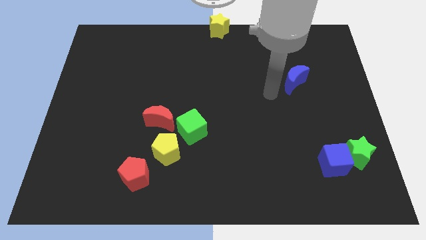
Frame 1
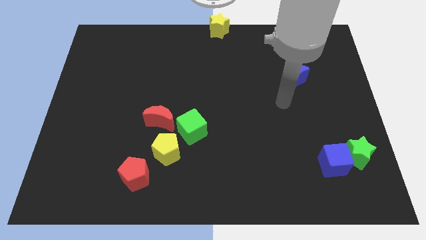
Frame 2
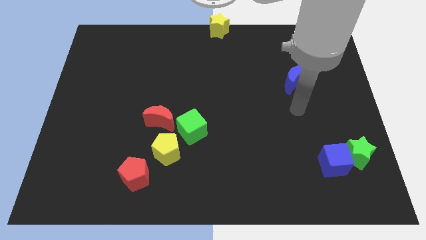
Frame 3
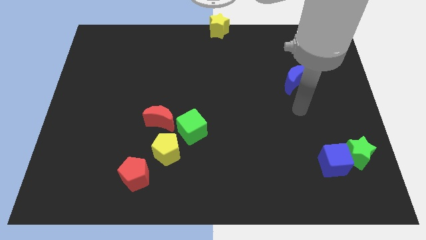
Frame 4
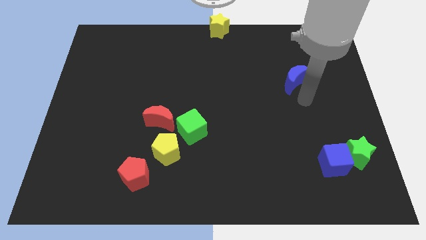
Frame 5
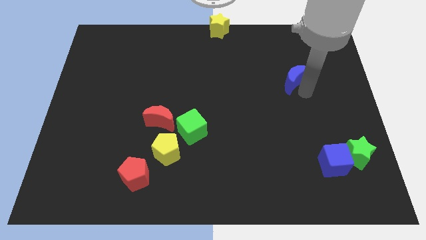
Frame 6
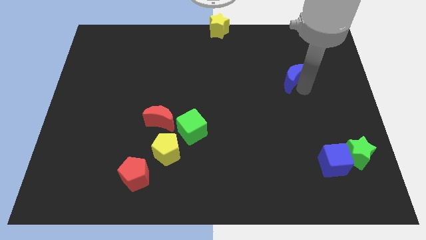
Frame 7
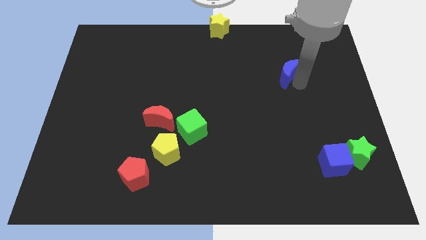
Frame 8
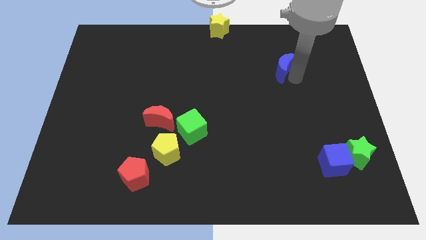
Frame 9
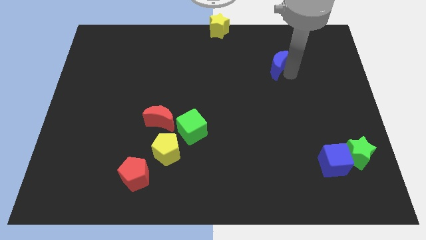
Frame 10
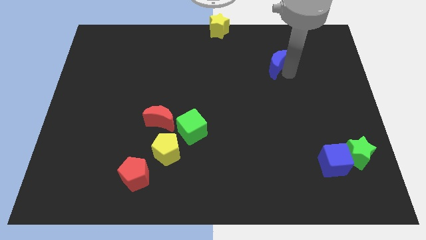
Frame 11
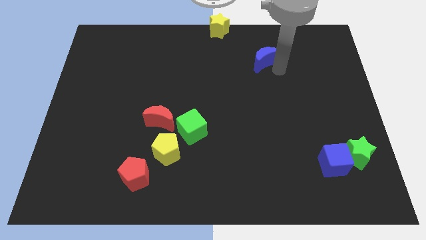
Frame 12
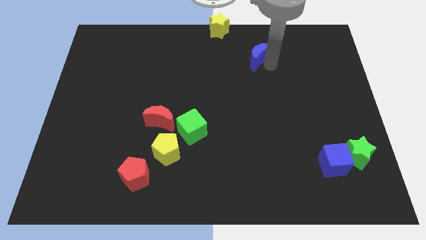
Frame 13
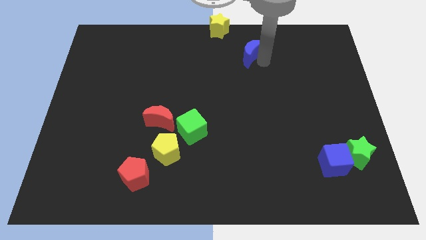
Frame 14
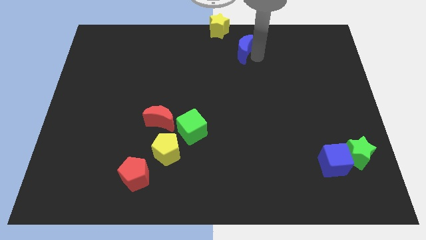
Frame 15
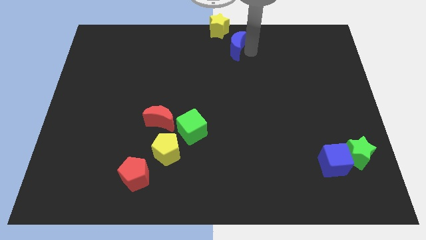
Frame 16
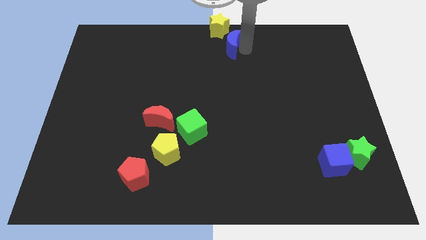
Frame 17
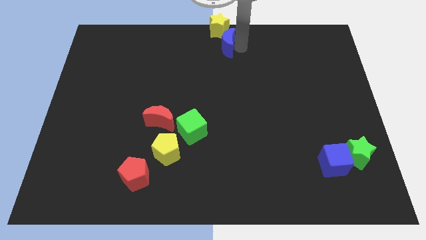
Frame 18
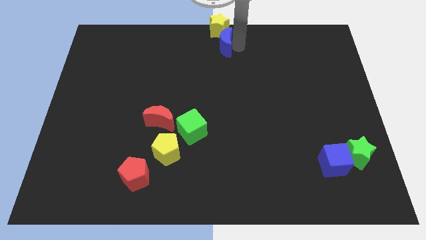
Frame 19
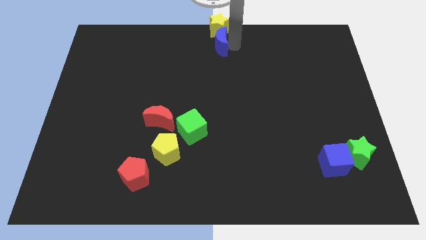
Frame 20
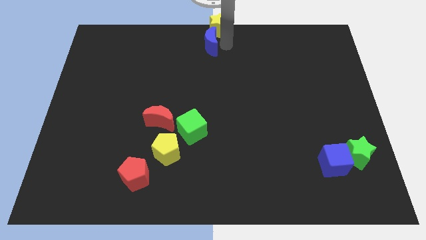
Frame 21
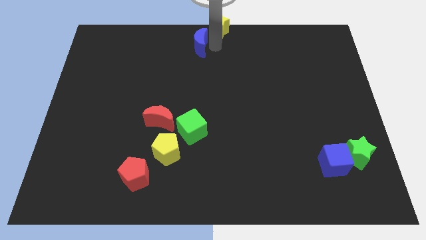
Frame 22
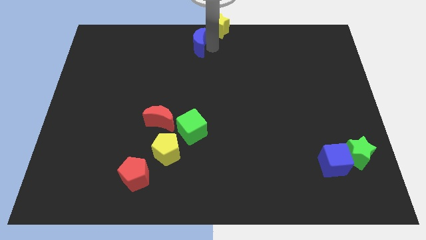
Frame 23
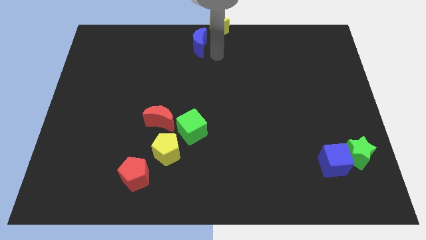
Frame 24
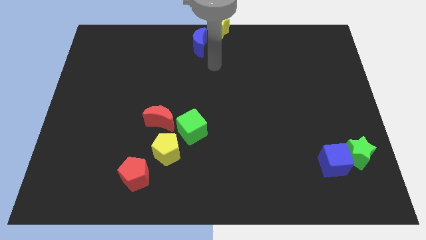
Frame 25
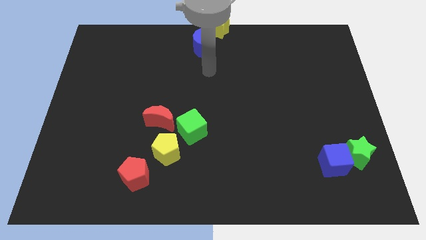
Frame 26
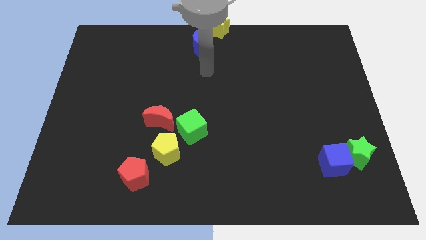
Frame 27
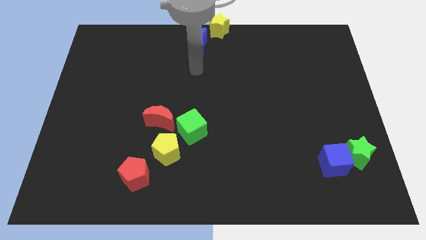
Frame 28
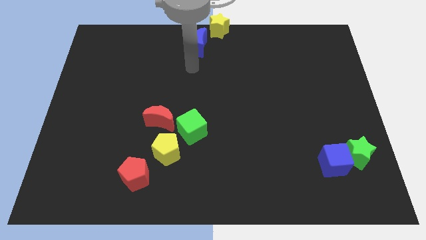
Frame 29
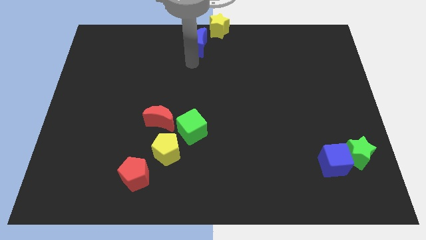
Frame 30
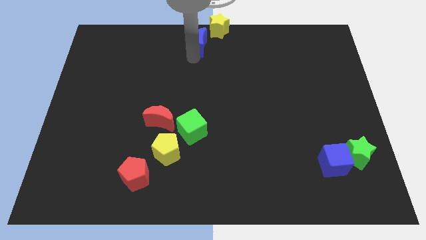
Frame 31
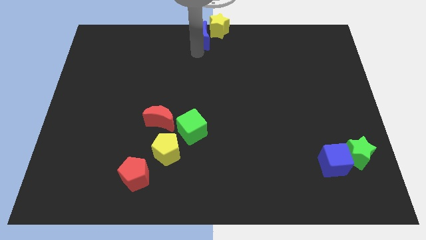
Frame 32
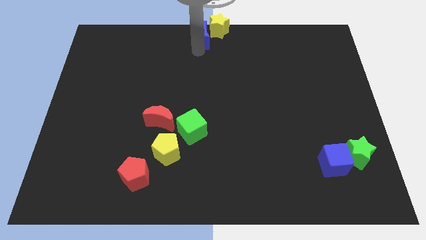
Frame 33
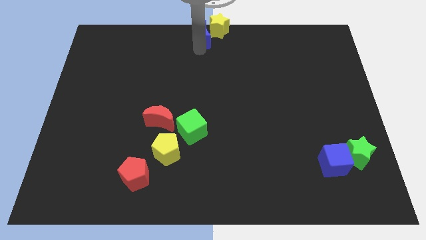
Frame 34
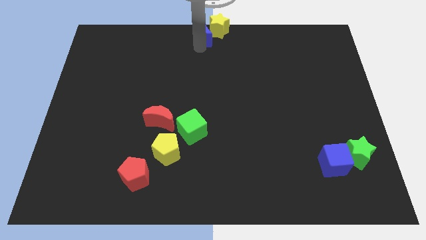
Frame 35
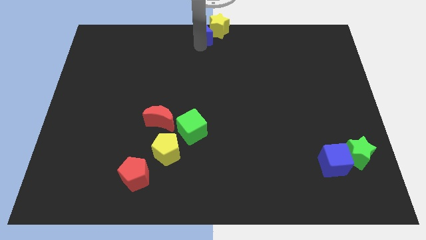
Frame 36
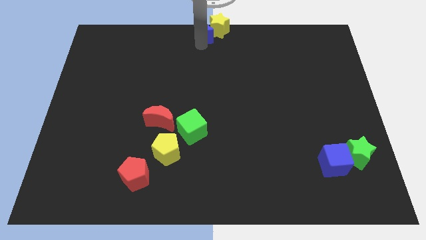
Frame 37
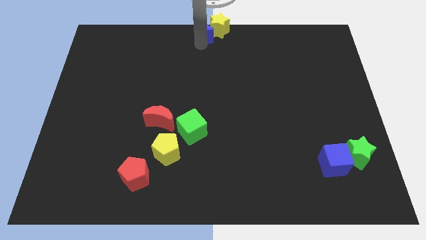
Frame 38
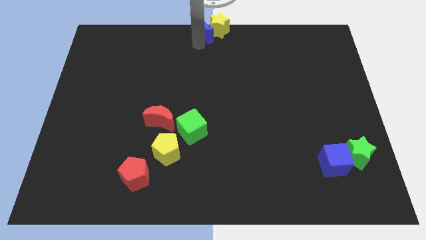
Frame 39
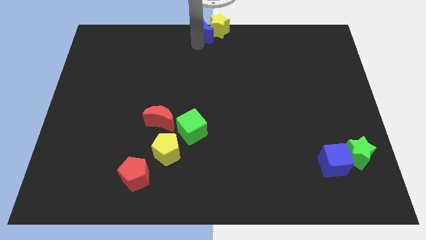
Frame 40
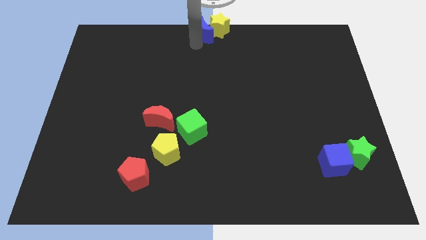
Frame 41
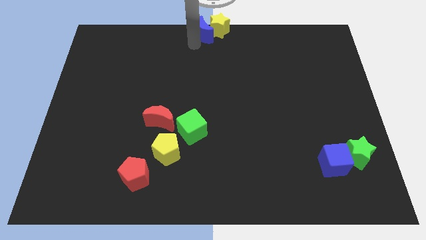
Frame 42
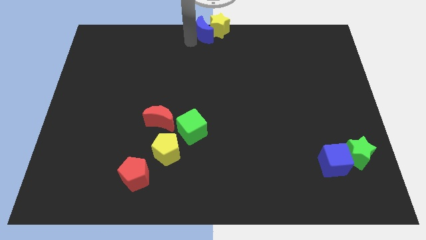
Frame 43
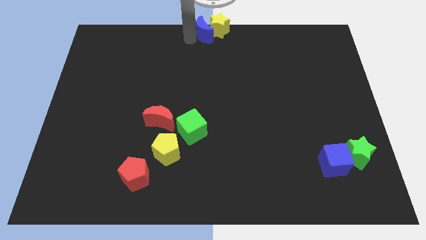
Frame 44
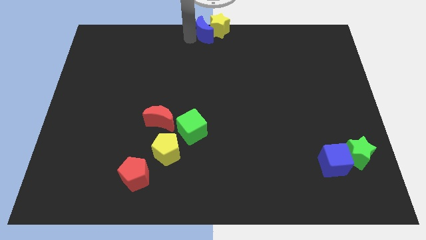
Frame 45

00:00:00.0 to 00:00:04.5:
place the blue moon left to the yellow star

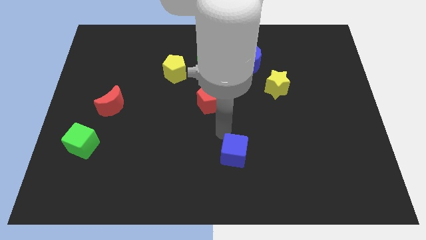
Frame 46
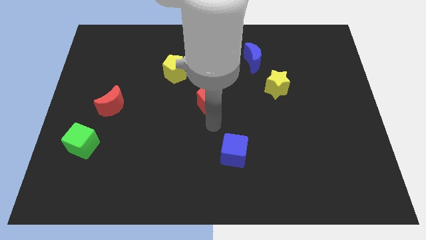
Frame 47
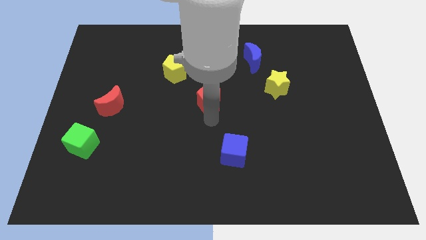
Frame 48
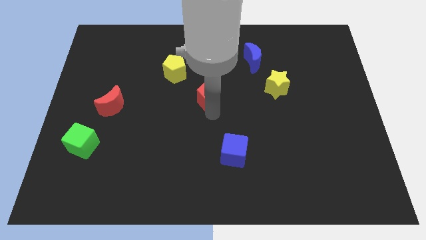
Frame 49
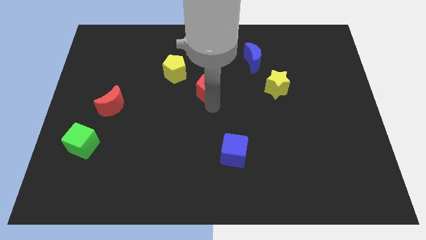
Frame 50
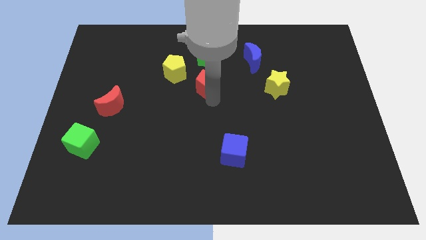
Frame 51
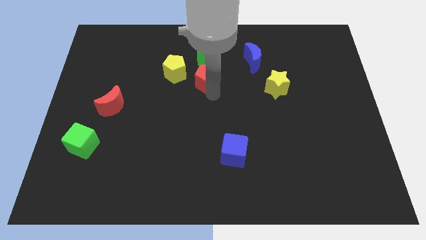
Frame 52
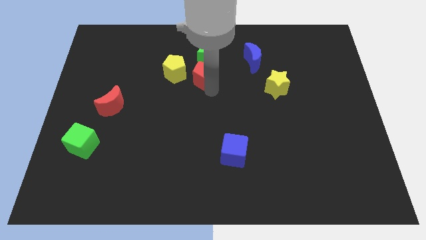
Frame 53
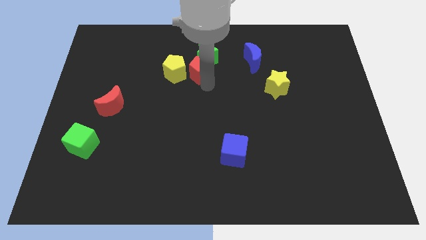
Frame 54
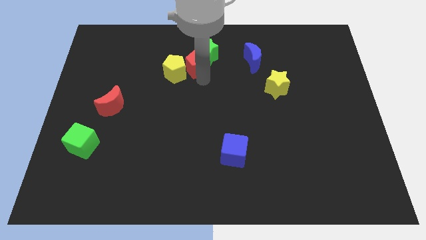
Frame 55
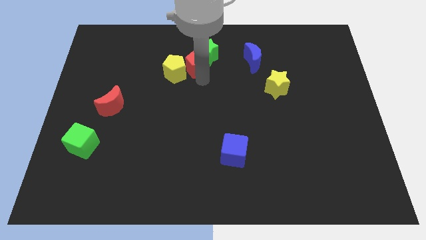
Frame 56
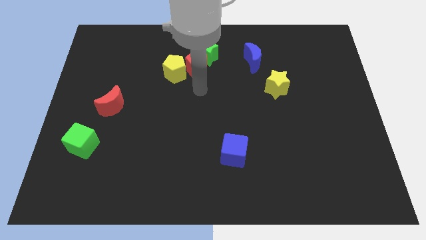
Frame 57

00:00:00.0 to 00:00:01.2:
push red pentagon in to green star

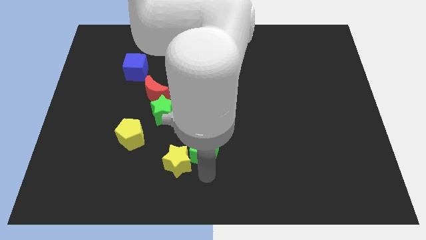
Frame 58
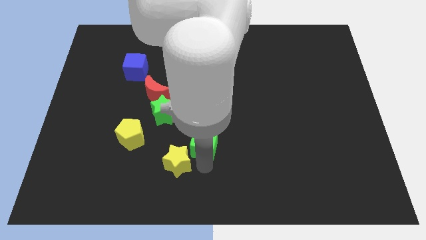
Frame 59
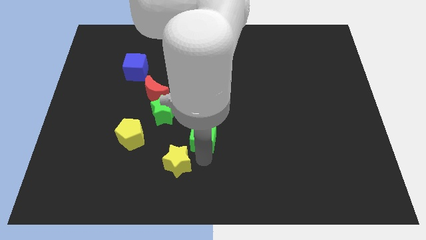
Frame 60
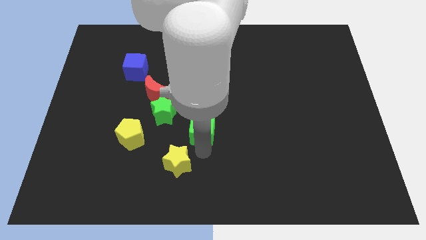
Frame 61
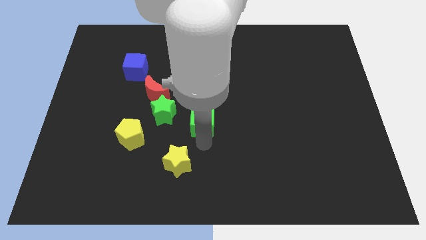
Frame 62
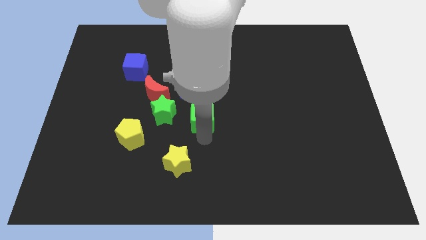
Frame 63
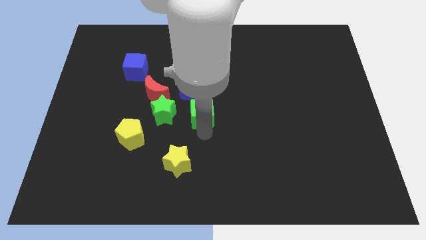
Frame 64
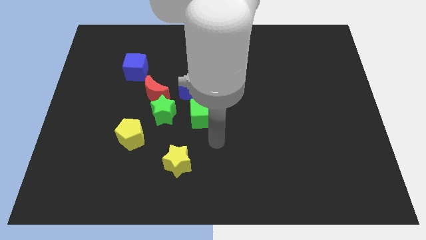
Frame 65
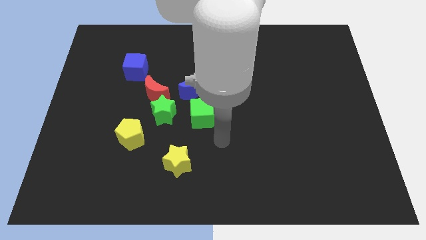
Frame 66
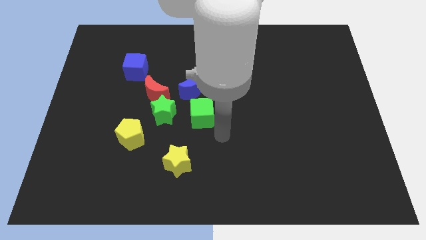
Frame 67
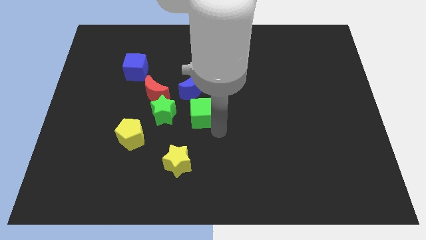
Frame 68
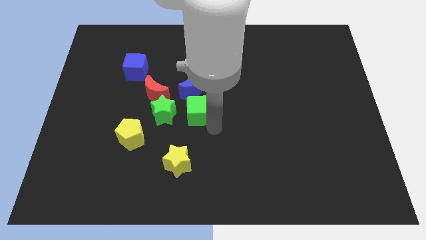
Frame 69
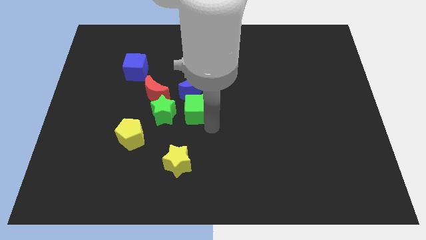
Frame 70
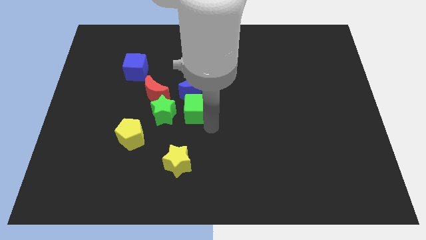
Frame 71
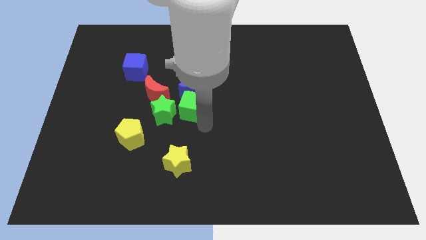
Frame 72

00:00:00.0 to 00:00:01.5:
put the green cube to the right side of the green star

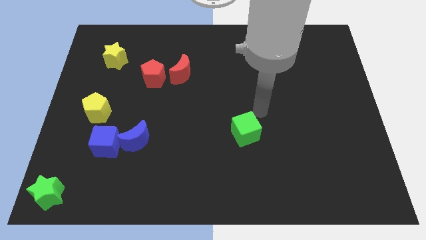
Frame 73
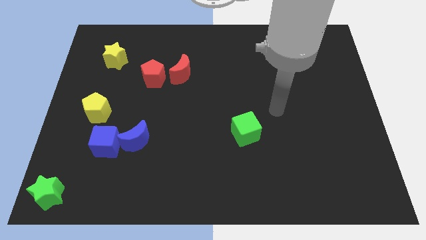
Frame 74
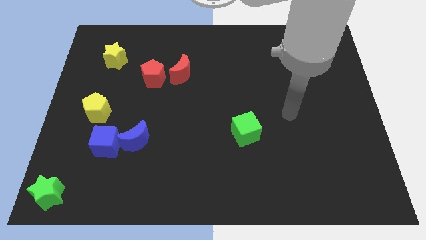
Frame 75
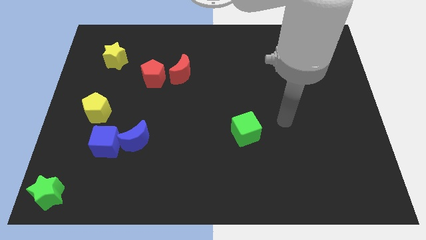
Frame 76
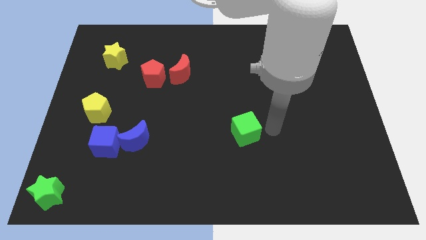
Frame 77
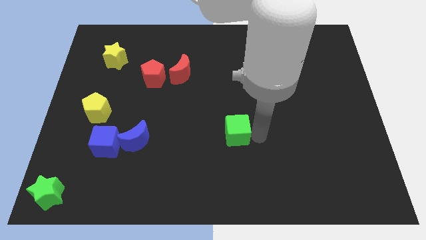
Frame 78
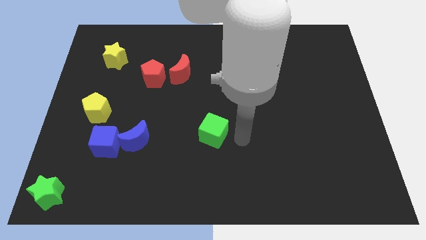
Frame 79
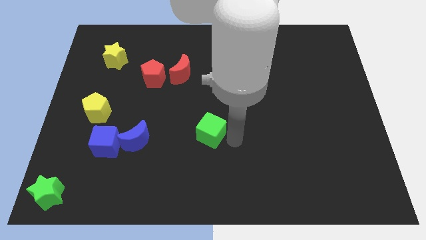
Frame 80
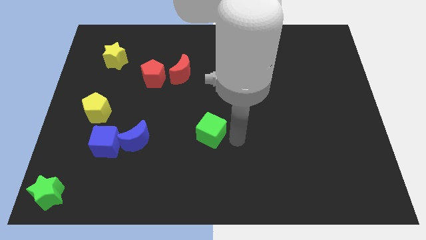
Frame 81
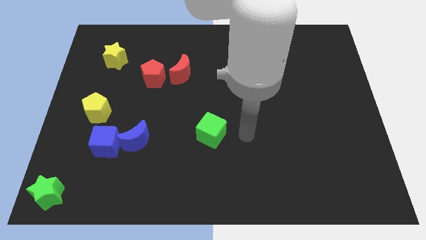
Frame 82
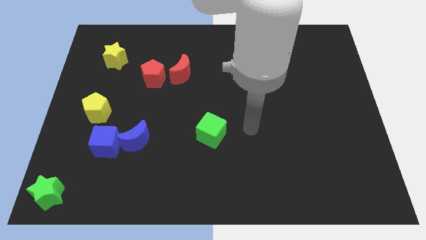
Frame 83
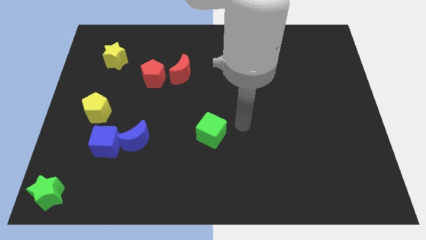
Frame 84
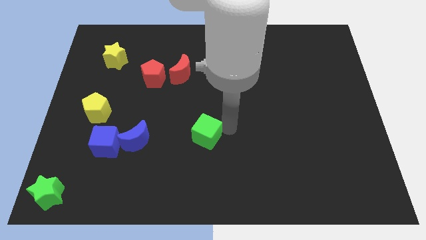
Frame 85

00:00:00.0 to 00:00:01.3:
push the green cube closer to the blue moon

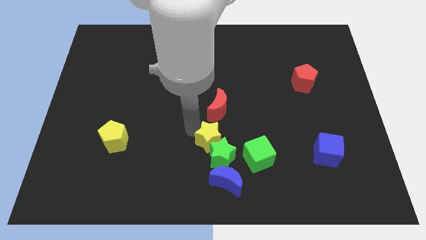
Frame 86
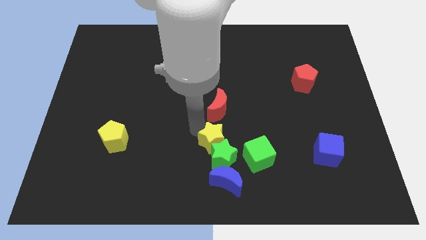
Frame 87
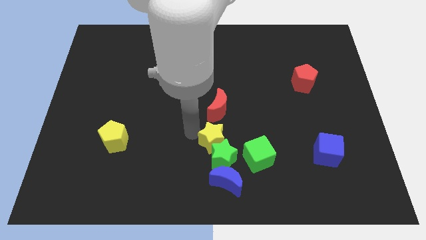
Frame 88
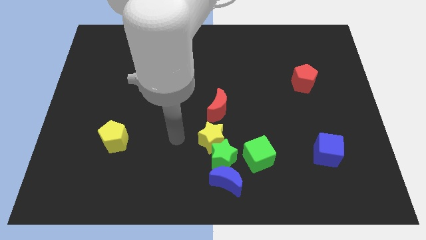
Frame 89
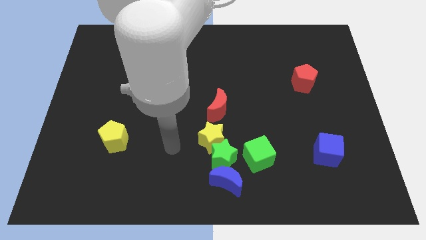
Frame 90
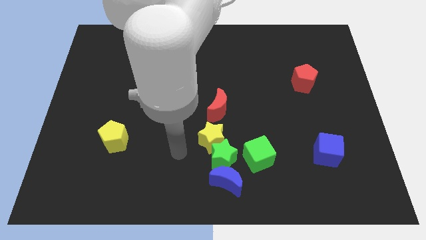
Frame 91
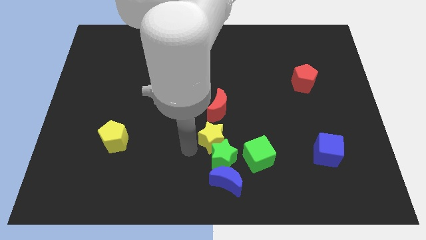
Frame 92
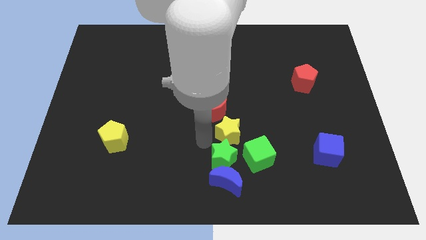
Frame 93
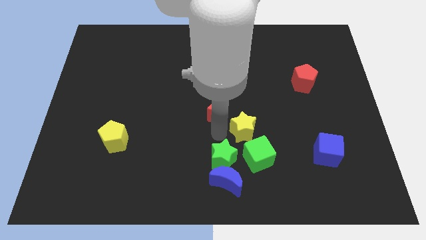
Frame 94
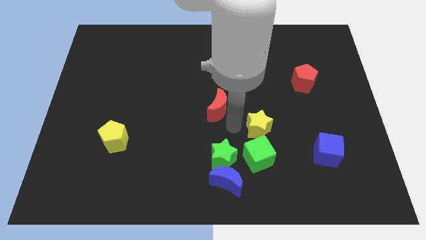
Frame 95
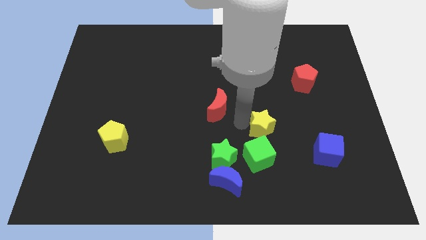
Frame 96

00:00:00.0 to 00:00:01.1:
push the yellow star to the top of the green cube
